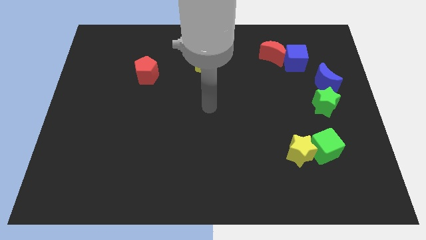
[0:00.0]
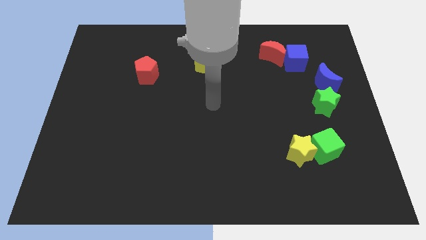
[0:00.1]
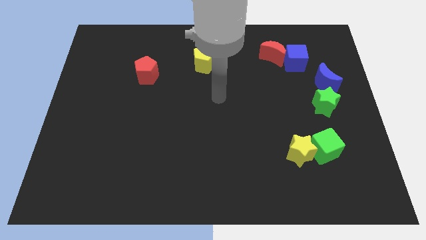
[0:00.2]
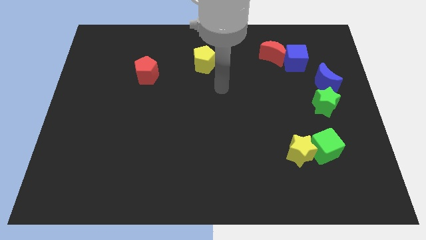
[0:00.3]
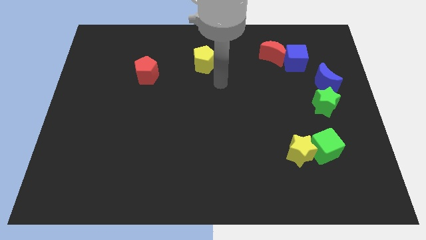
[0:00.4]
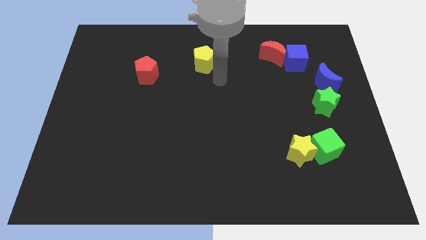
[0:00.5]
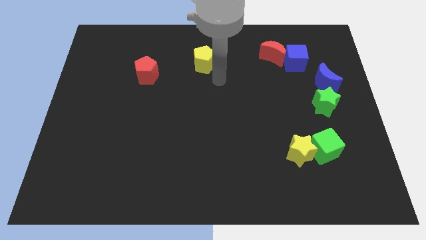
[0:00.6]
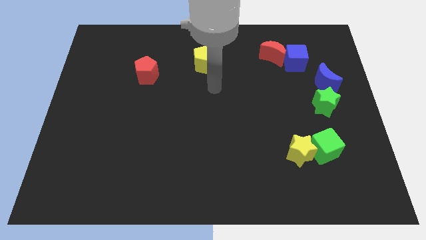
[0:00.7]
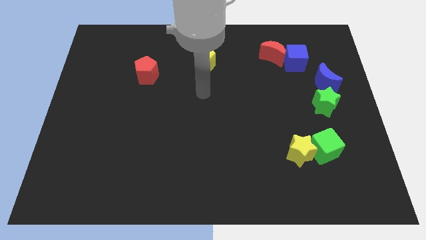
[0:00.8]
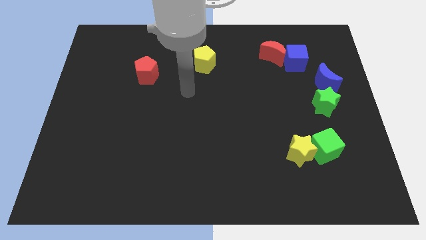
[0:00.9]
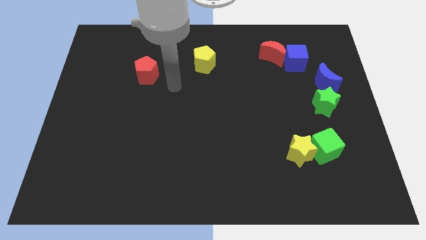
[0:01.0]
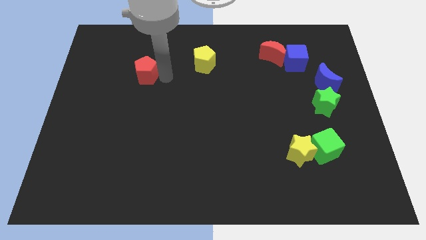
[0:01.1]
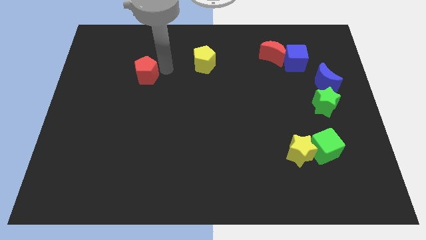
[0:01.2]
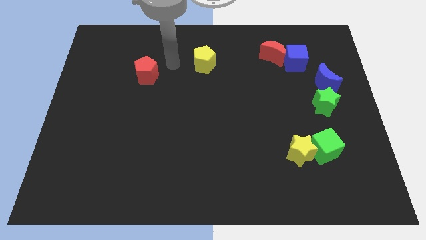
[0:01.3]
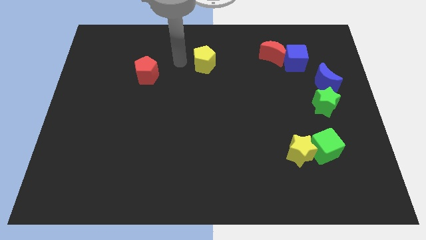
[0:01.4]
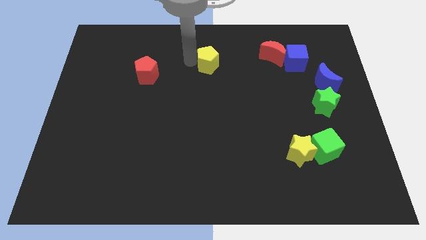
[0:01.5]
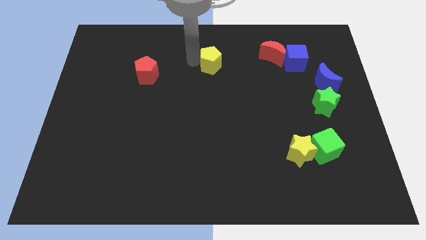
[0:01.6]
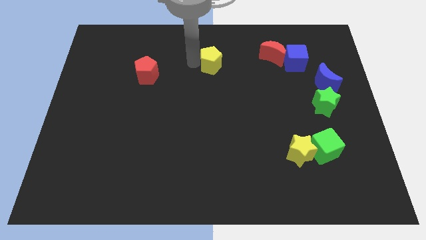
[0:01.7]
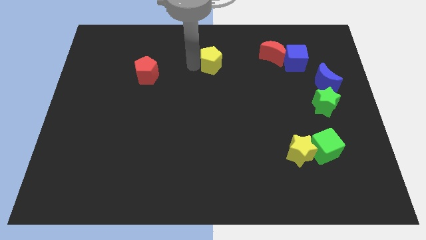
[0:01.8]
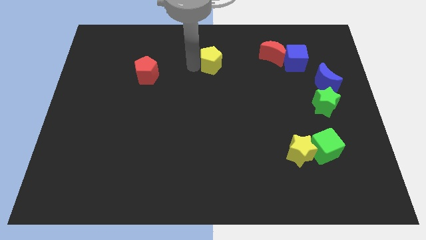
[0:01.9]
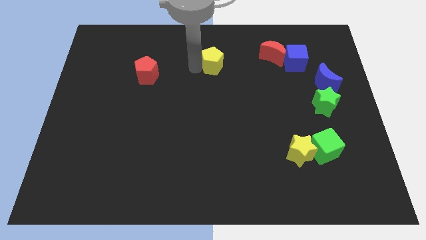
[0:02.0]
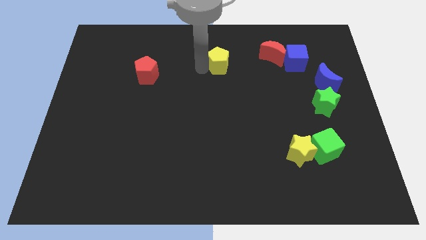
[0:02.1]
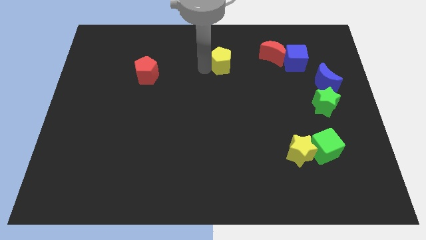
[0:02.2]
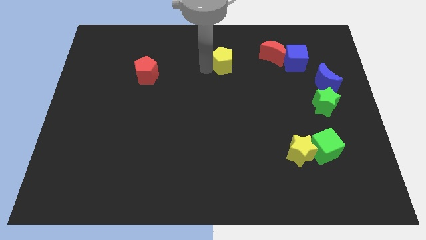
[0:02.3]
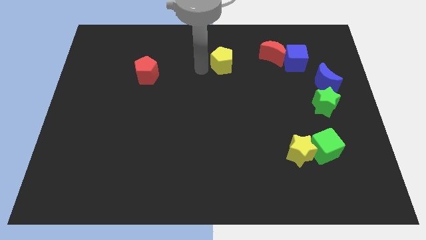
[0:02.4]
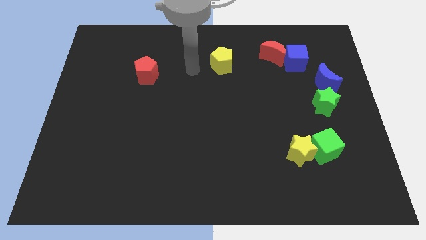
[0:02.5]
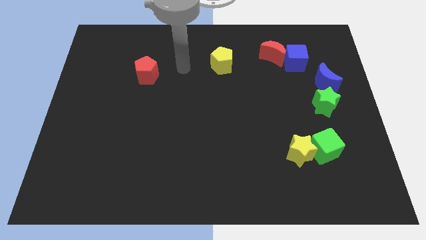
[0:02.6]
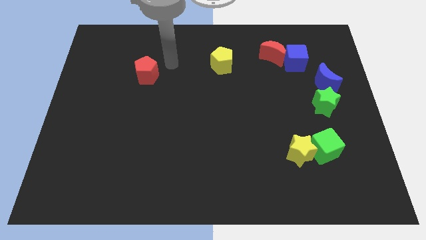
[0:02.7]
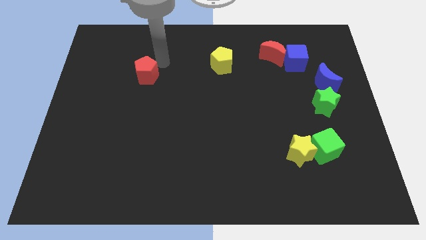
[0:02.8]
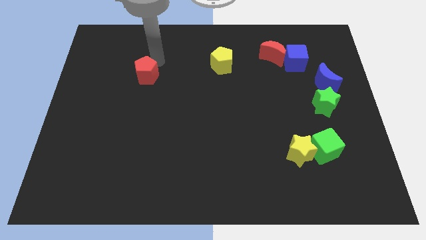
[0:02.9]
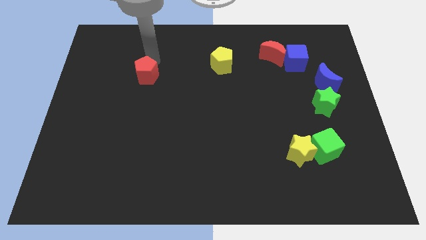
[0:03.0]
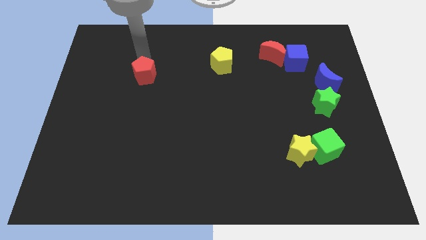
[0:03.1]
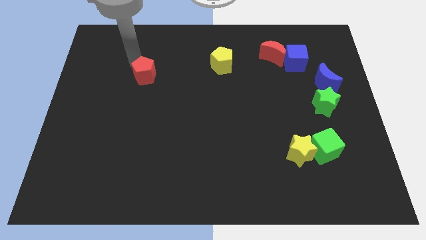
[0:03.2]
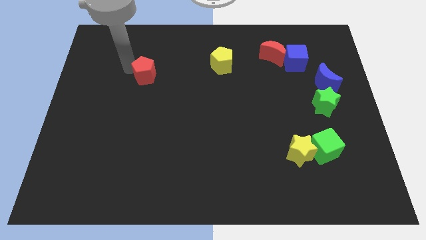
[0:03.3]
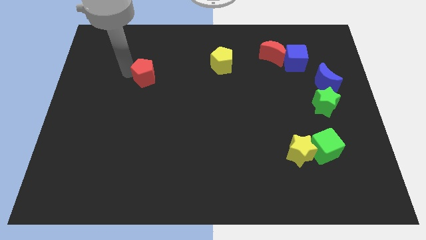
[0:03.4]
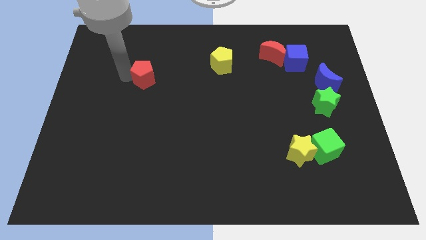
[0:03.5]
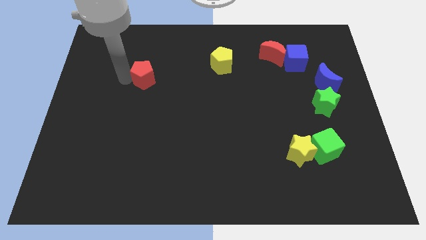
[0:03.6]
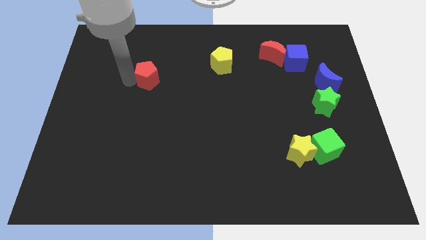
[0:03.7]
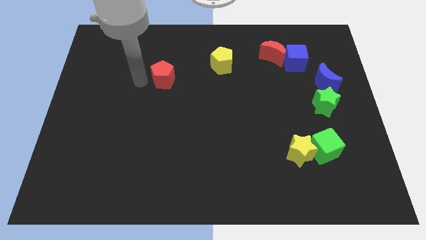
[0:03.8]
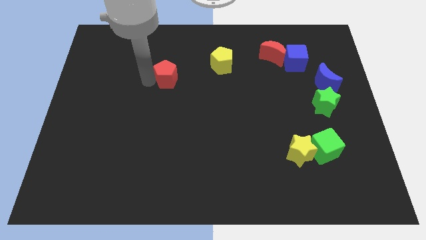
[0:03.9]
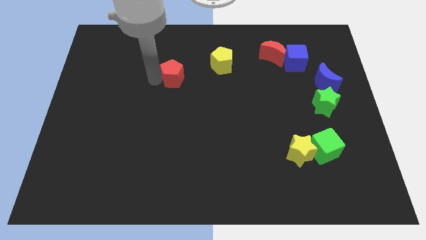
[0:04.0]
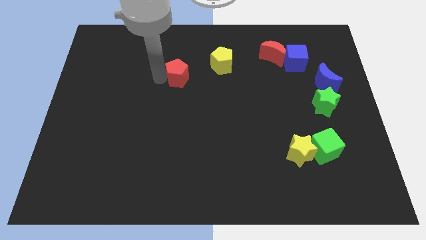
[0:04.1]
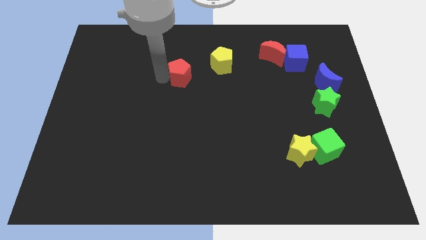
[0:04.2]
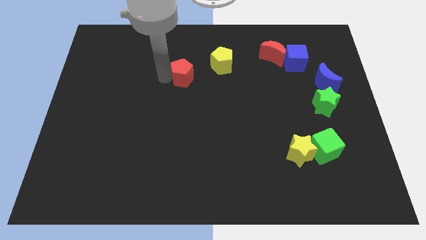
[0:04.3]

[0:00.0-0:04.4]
move the red pentagon towards the right side of the board

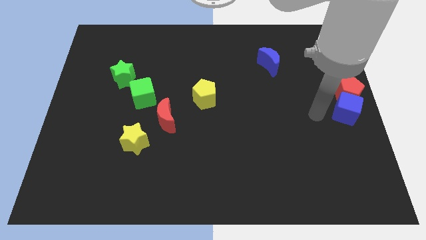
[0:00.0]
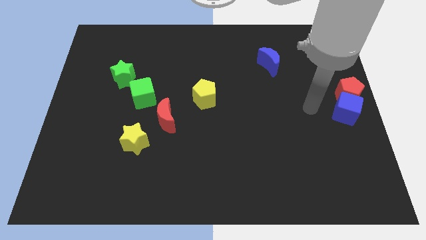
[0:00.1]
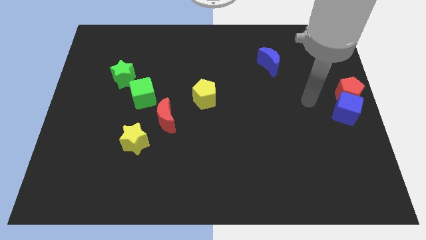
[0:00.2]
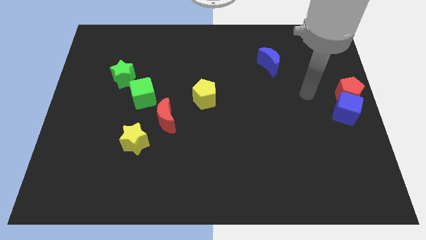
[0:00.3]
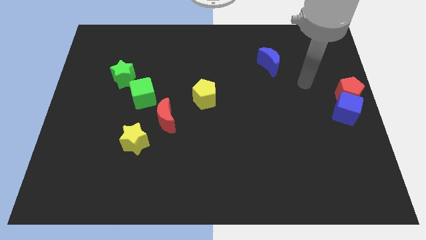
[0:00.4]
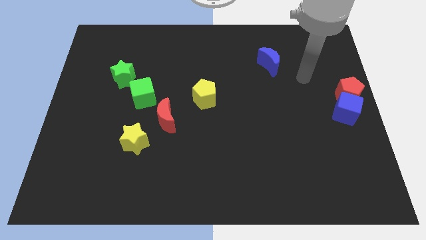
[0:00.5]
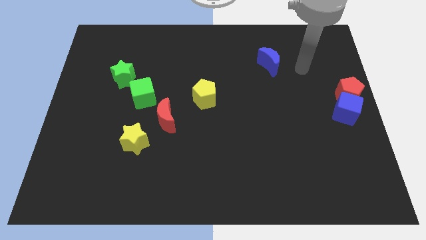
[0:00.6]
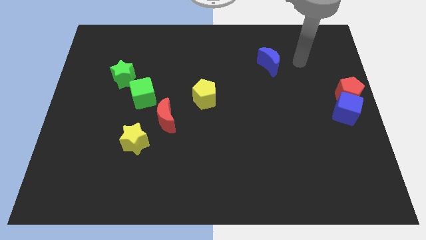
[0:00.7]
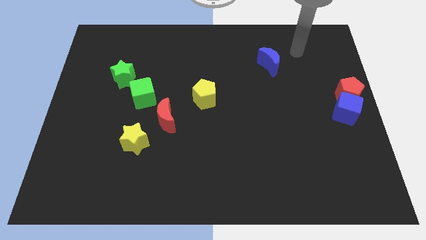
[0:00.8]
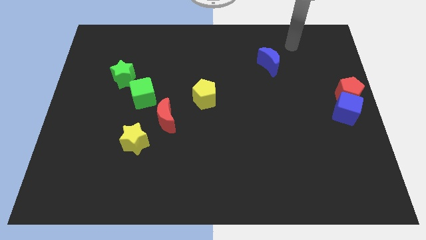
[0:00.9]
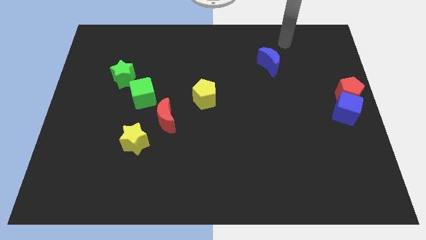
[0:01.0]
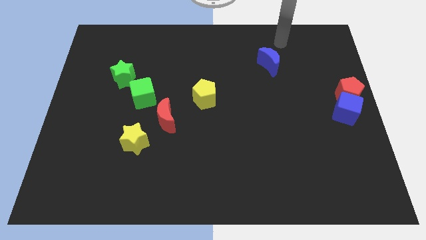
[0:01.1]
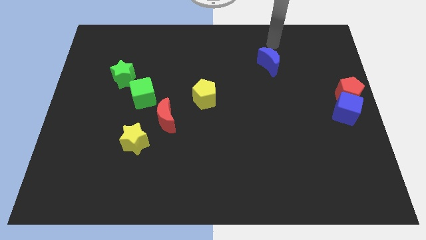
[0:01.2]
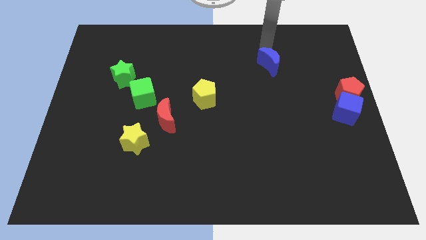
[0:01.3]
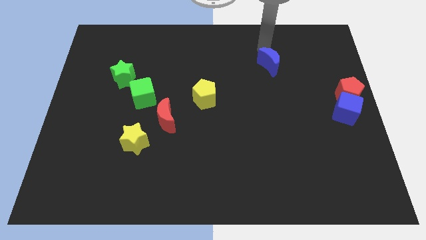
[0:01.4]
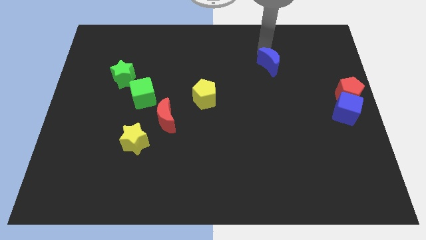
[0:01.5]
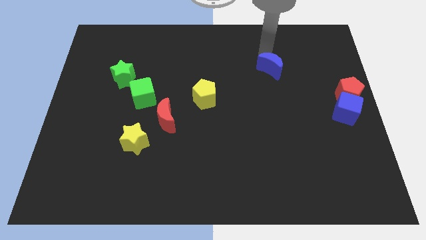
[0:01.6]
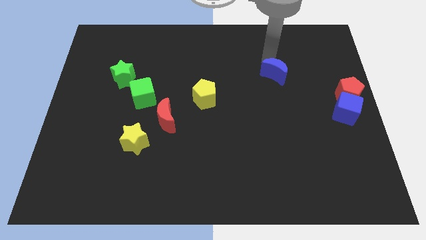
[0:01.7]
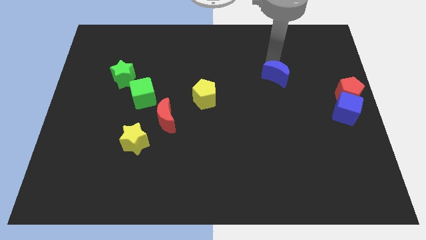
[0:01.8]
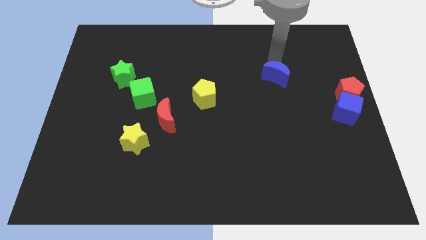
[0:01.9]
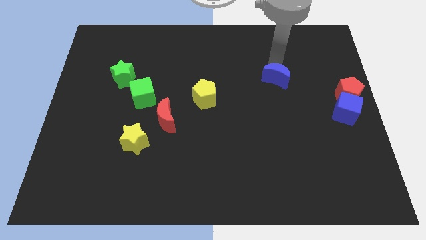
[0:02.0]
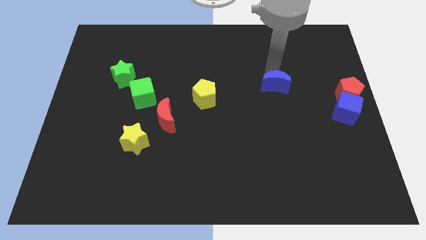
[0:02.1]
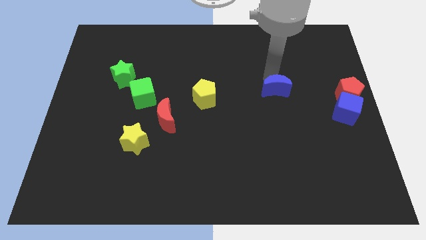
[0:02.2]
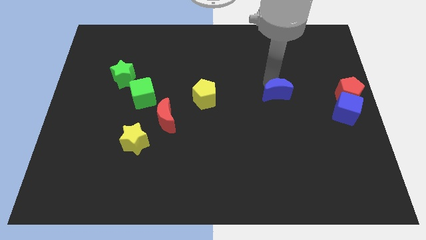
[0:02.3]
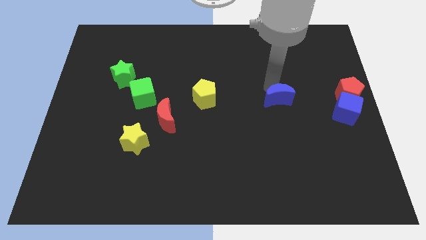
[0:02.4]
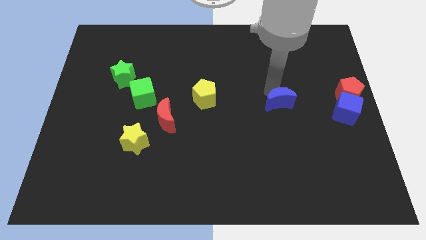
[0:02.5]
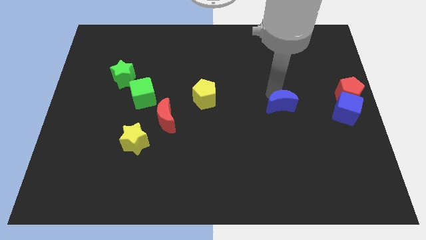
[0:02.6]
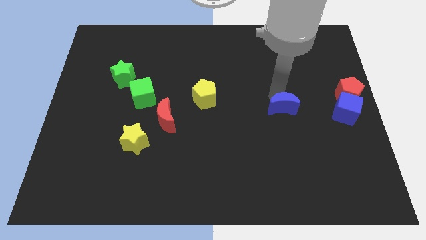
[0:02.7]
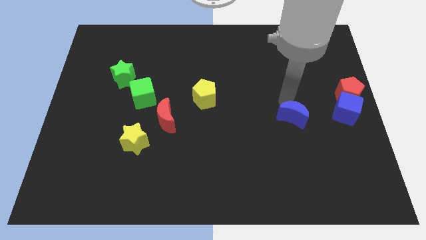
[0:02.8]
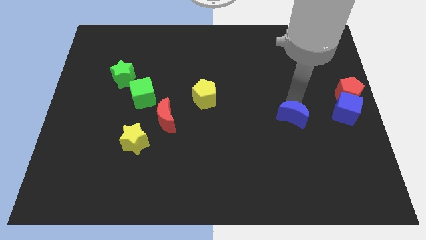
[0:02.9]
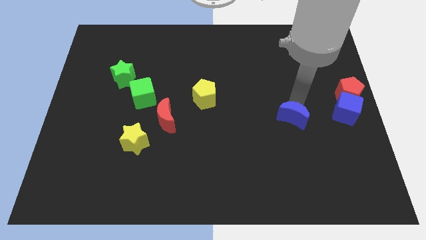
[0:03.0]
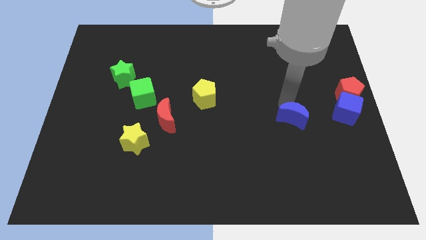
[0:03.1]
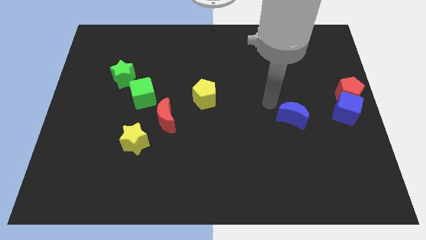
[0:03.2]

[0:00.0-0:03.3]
place the blue moon to the left of blue cube

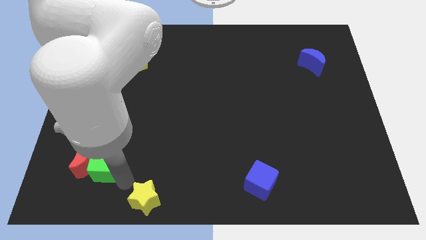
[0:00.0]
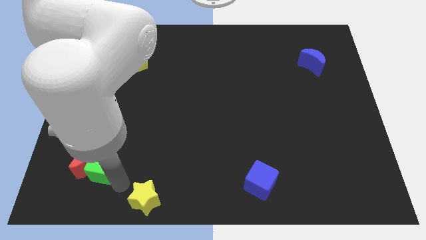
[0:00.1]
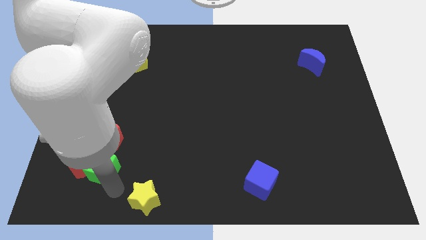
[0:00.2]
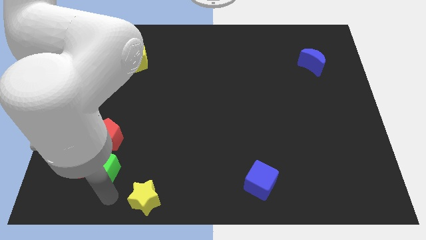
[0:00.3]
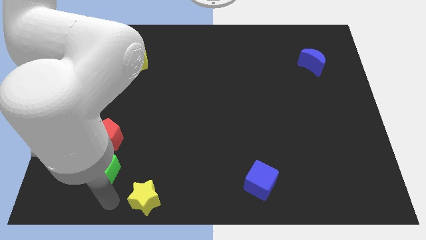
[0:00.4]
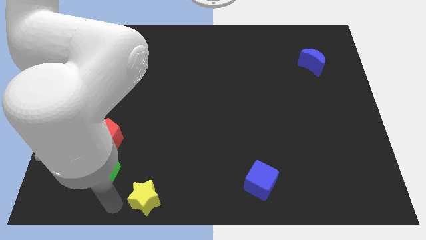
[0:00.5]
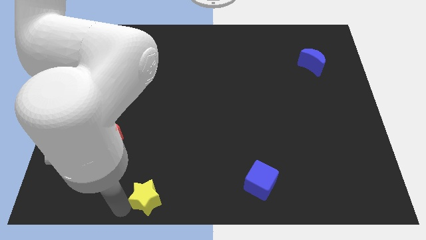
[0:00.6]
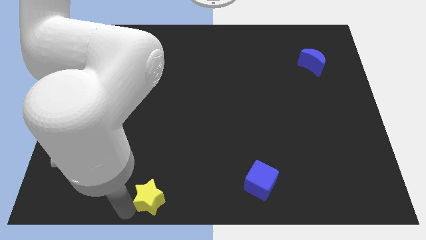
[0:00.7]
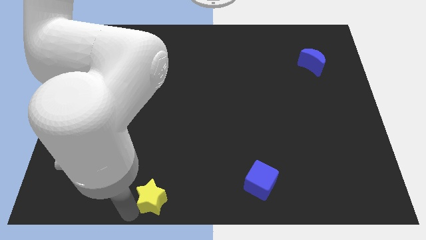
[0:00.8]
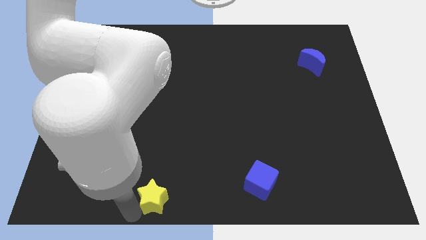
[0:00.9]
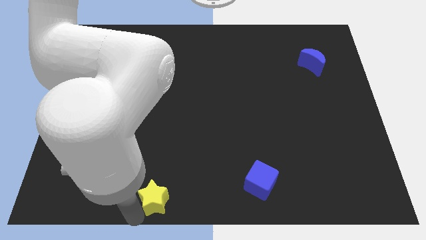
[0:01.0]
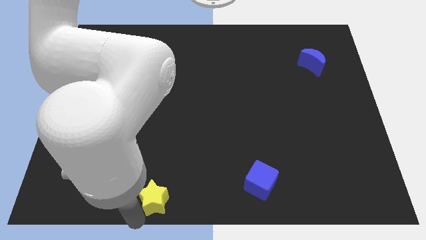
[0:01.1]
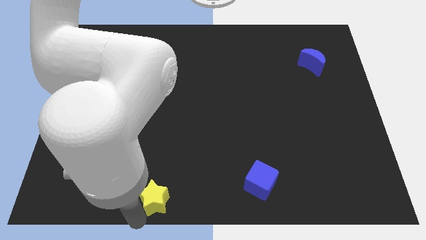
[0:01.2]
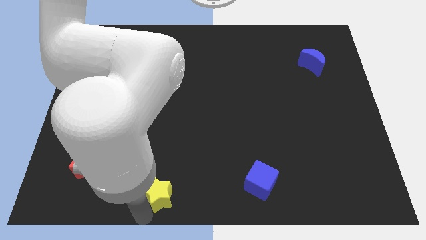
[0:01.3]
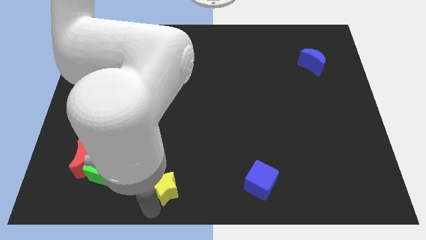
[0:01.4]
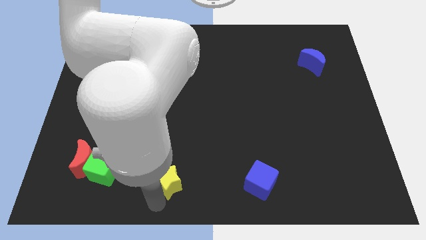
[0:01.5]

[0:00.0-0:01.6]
place the yellow star parallel to the blue cube on the left
